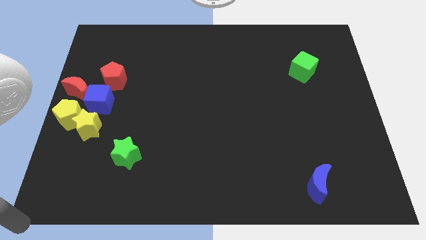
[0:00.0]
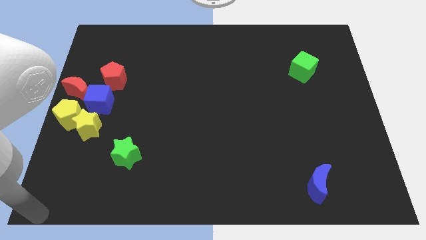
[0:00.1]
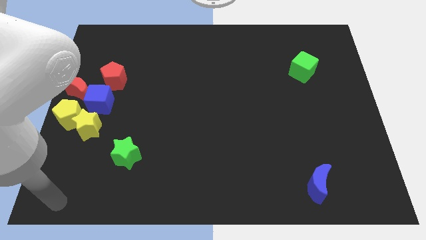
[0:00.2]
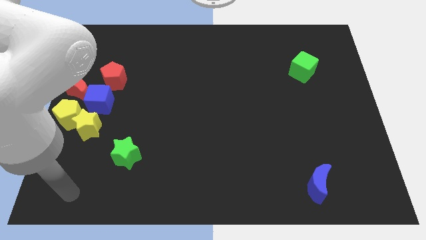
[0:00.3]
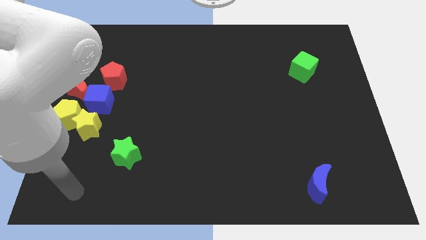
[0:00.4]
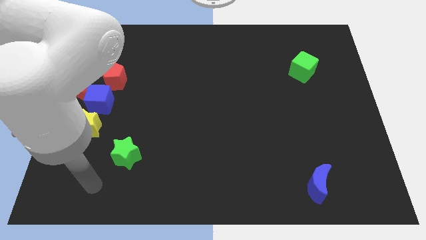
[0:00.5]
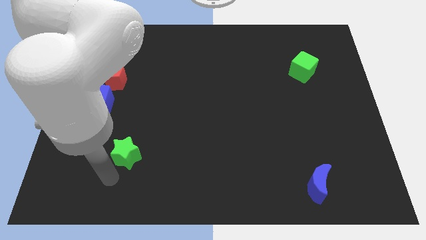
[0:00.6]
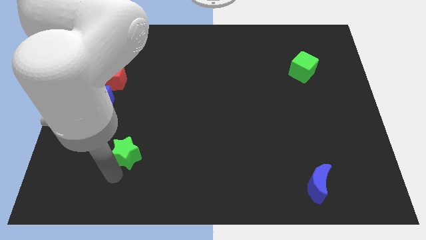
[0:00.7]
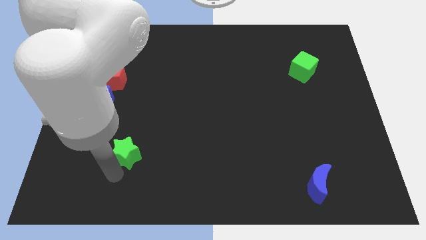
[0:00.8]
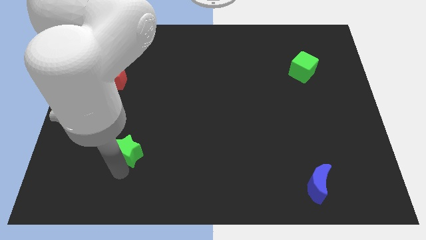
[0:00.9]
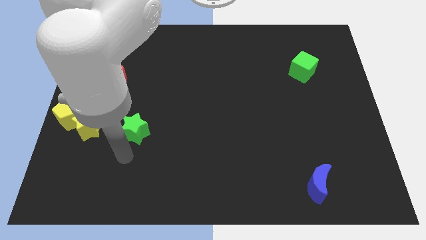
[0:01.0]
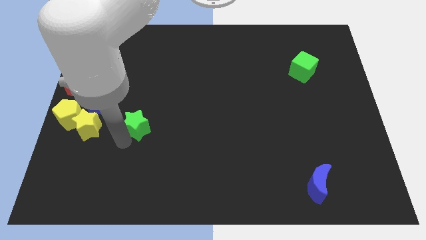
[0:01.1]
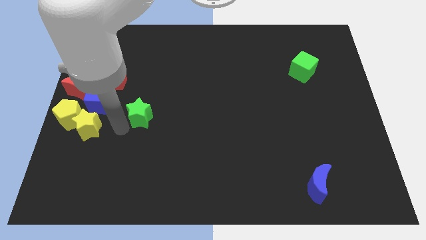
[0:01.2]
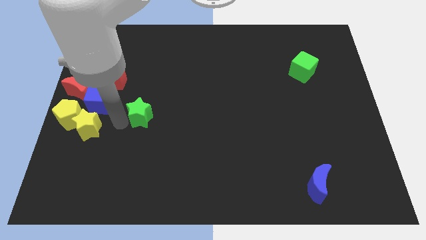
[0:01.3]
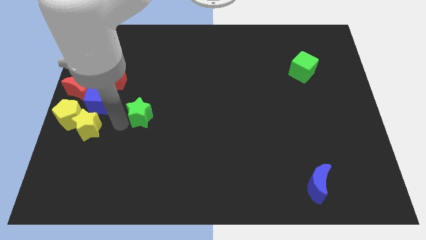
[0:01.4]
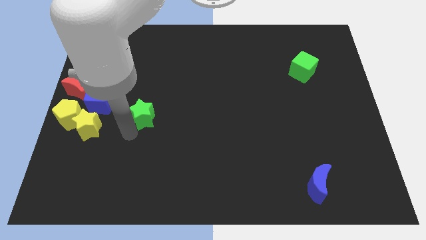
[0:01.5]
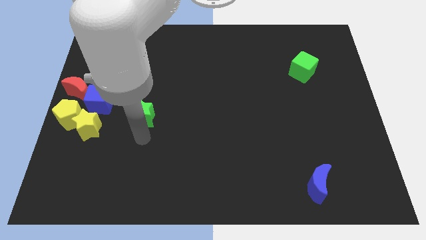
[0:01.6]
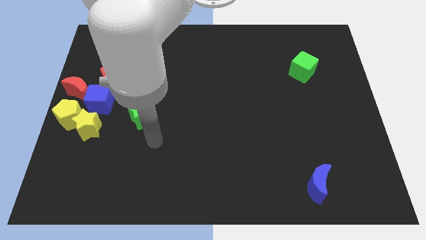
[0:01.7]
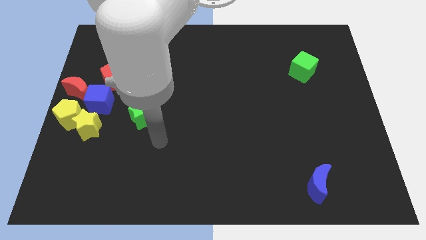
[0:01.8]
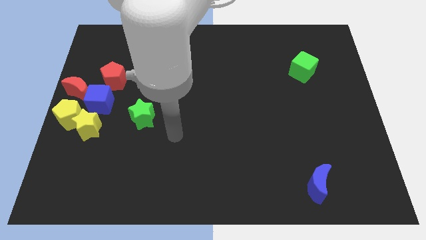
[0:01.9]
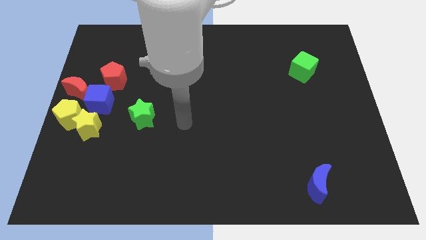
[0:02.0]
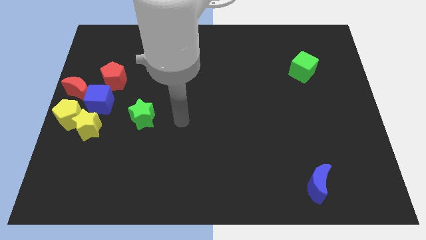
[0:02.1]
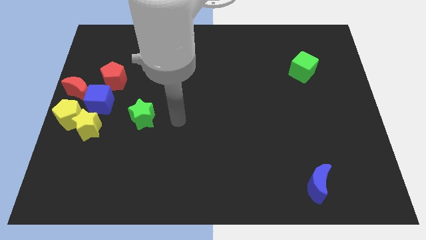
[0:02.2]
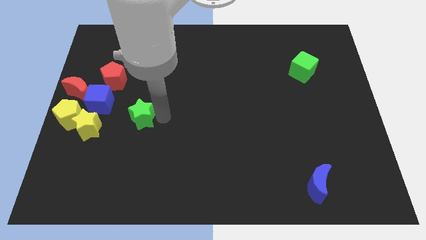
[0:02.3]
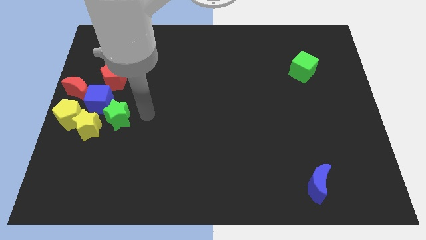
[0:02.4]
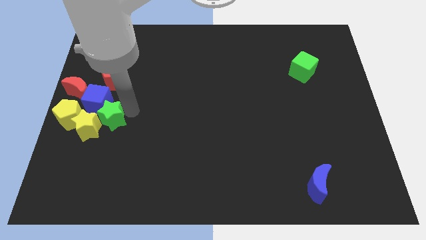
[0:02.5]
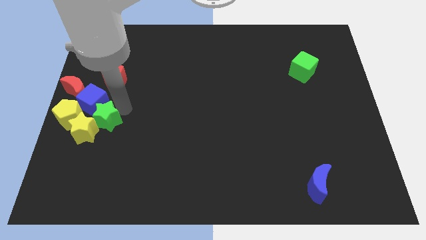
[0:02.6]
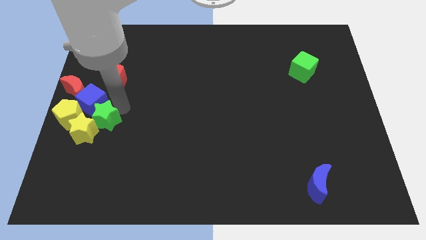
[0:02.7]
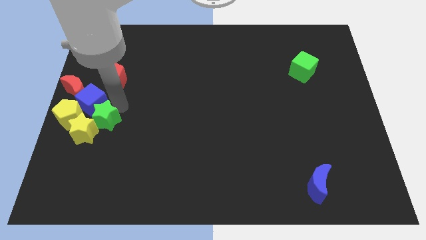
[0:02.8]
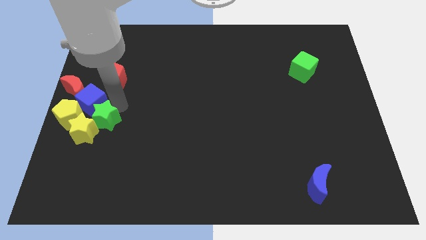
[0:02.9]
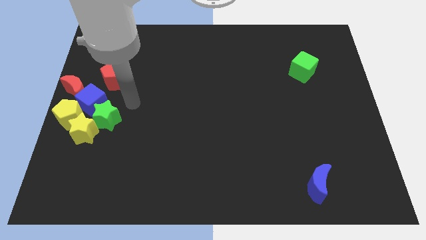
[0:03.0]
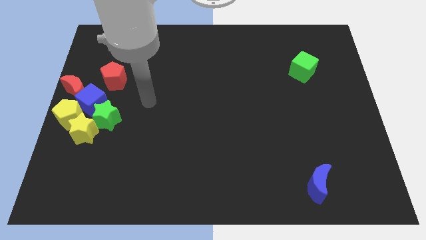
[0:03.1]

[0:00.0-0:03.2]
push the green star into the group of blocks

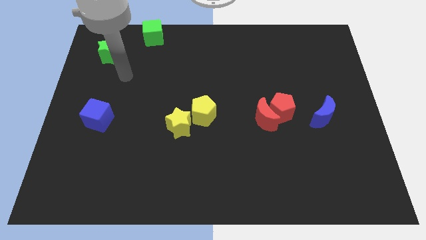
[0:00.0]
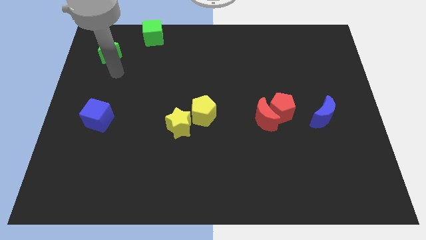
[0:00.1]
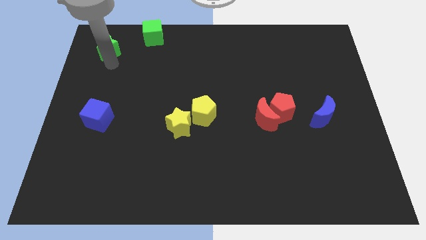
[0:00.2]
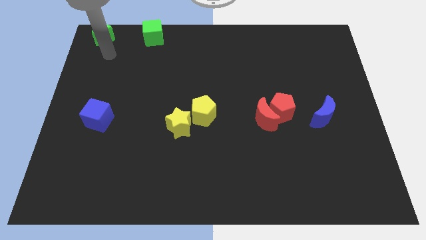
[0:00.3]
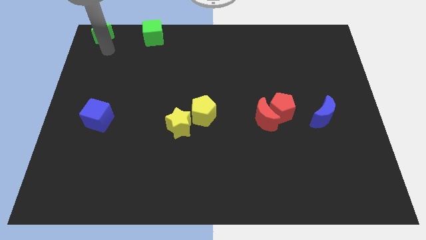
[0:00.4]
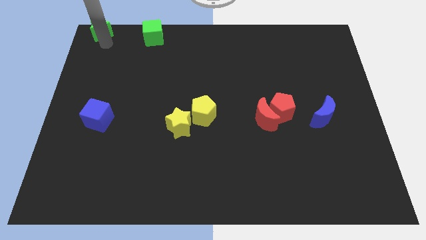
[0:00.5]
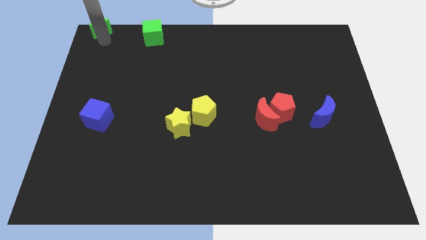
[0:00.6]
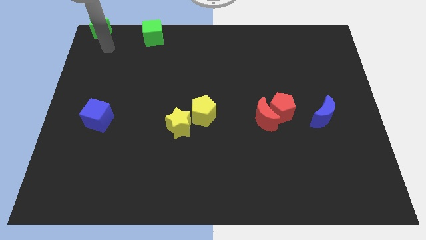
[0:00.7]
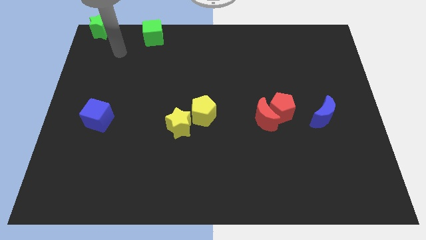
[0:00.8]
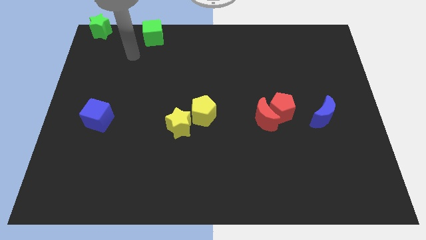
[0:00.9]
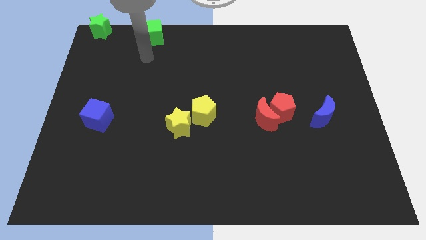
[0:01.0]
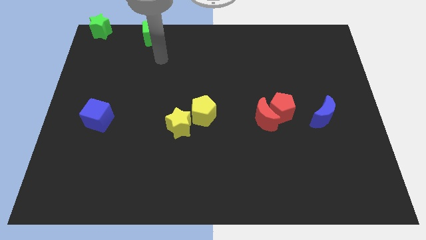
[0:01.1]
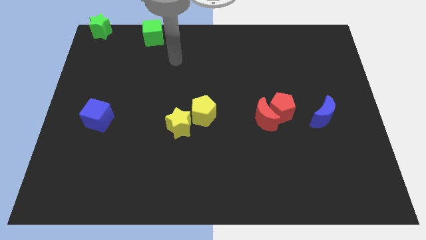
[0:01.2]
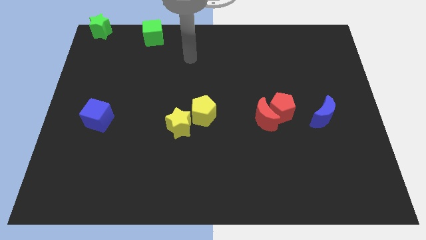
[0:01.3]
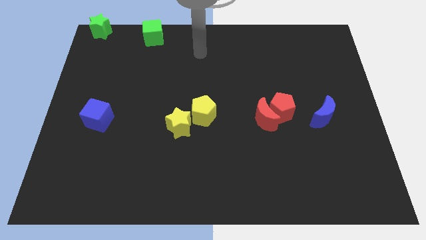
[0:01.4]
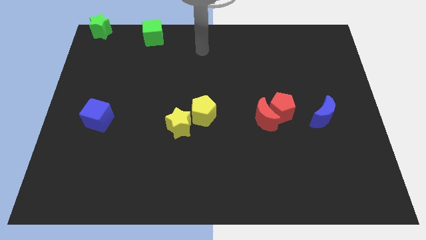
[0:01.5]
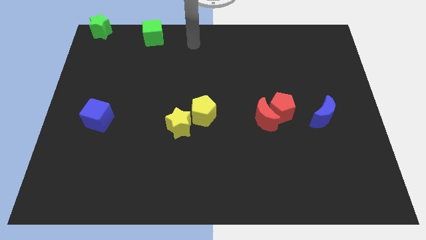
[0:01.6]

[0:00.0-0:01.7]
move the green star to the top left

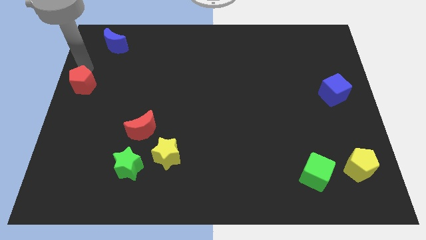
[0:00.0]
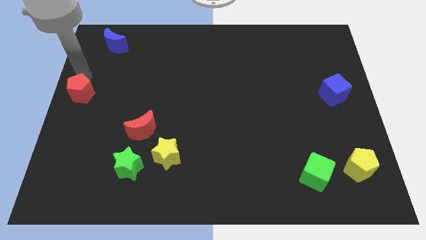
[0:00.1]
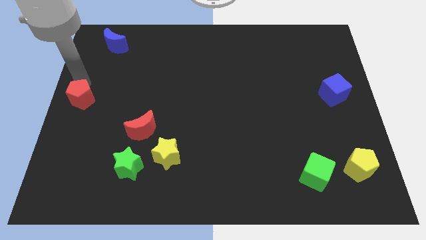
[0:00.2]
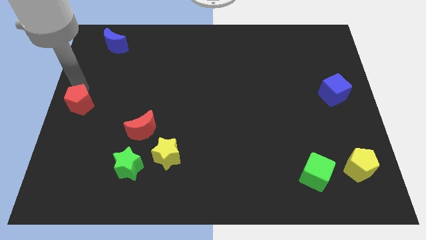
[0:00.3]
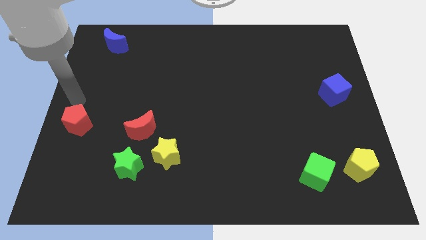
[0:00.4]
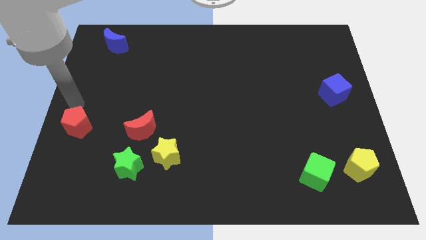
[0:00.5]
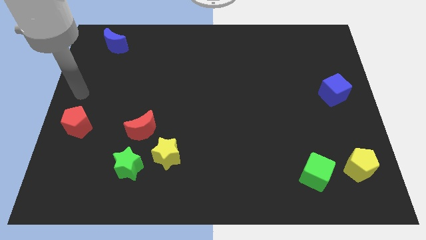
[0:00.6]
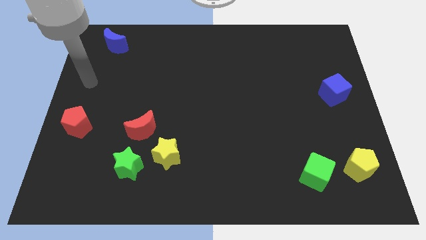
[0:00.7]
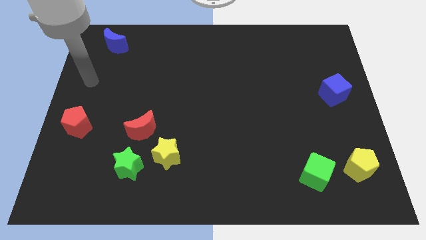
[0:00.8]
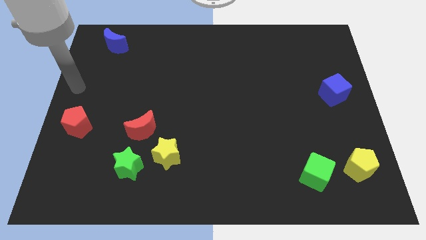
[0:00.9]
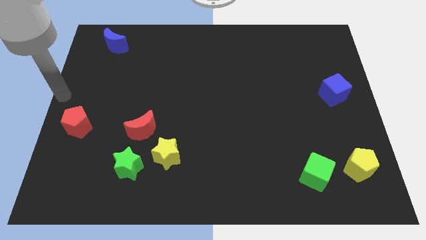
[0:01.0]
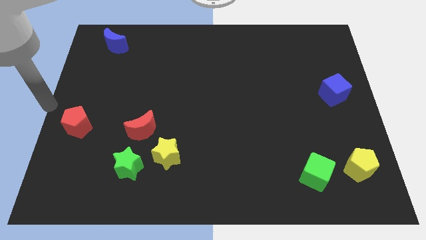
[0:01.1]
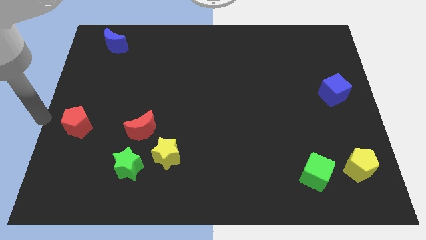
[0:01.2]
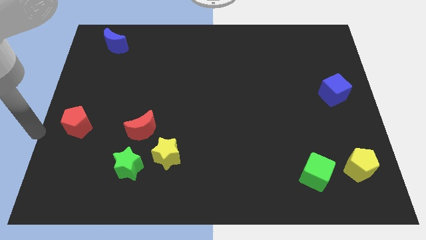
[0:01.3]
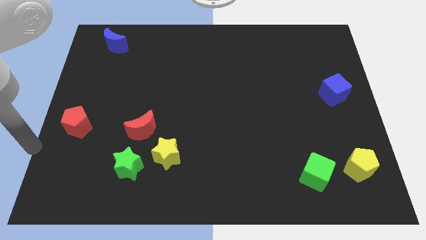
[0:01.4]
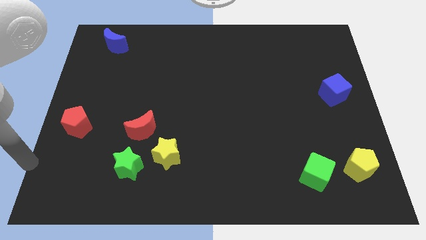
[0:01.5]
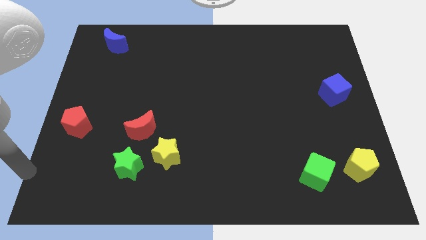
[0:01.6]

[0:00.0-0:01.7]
move the red pentagon to the bottom of the board

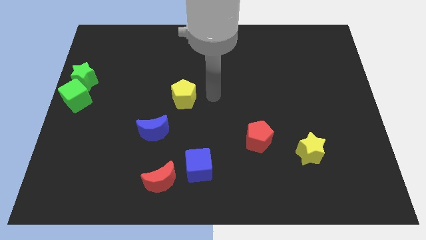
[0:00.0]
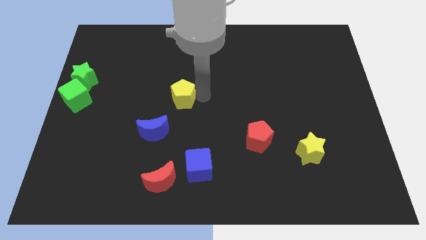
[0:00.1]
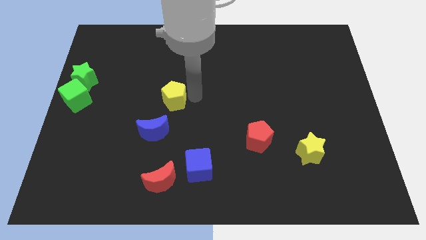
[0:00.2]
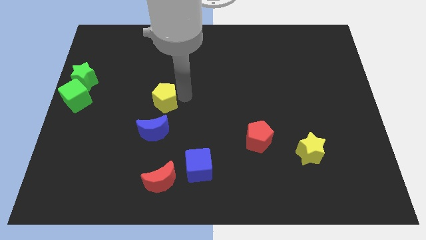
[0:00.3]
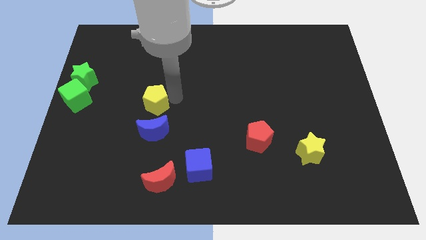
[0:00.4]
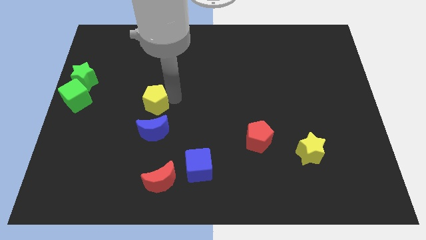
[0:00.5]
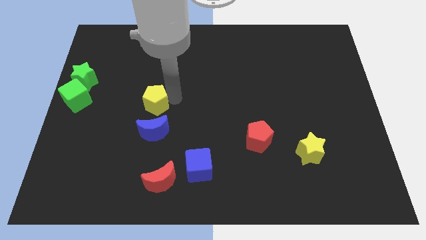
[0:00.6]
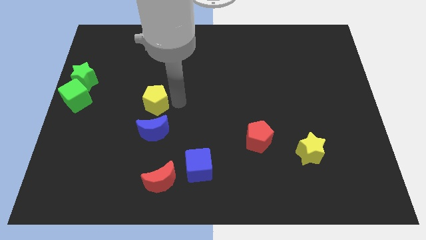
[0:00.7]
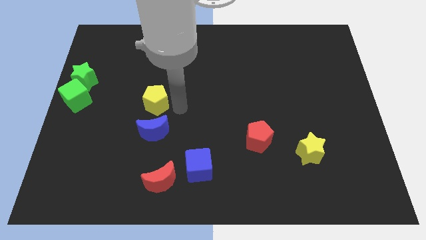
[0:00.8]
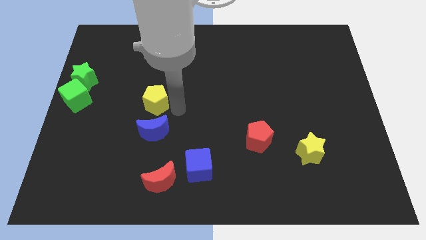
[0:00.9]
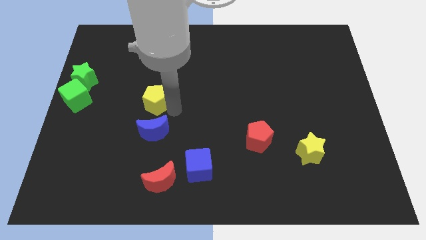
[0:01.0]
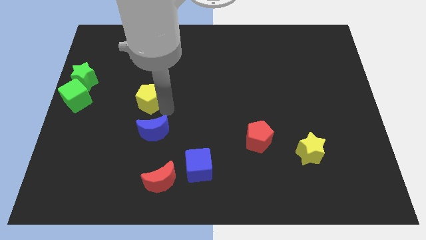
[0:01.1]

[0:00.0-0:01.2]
place the yellow pentagon vertically above the blue moon

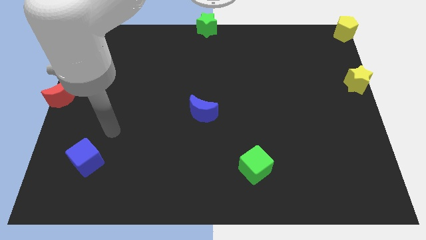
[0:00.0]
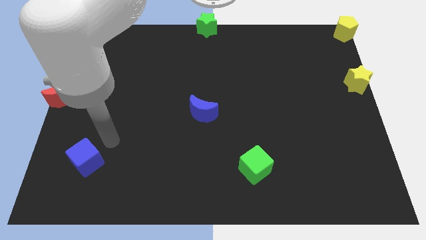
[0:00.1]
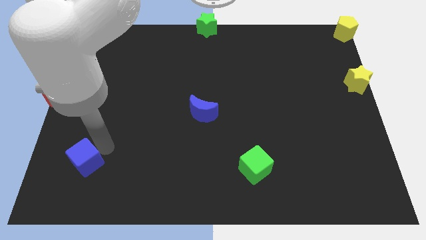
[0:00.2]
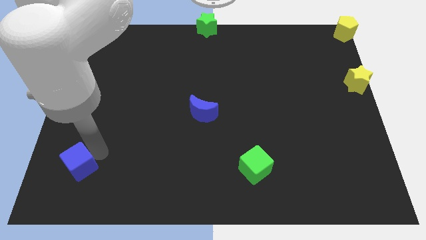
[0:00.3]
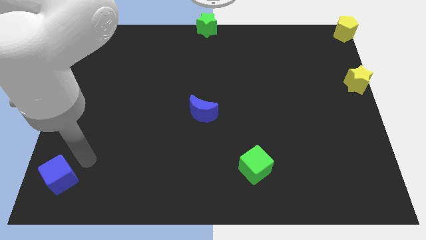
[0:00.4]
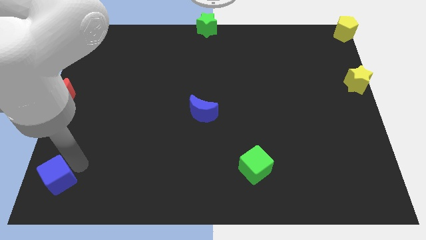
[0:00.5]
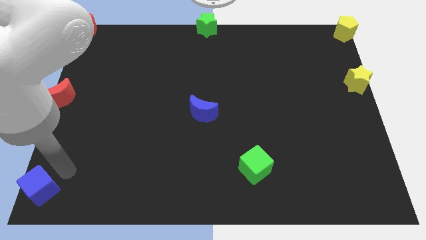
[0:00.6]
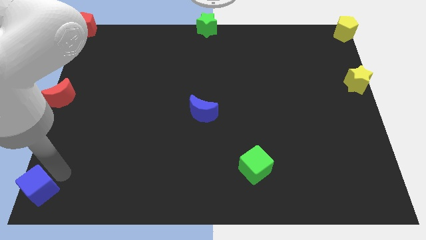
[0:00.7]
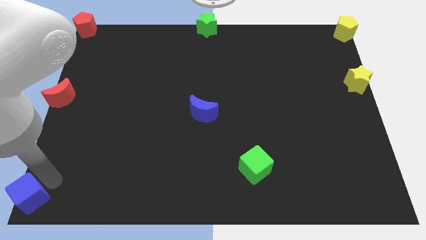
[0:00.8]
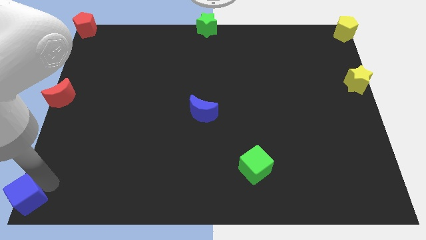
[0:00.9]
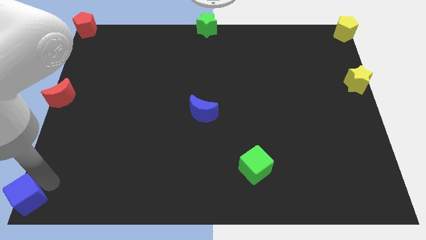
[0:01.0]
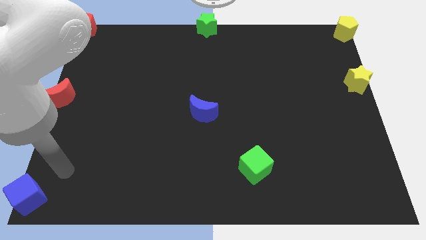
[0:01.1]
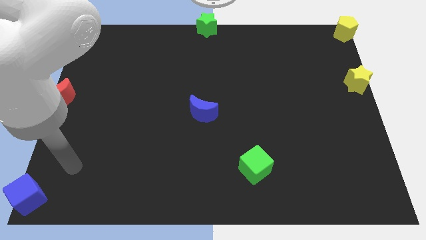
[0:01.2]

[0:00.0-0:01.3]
push the blue cube bottom left of the board
